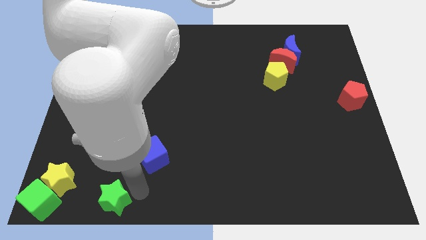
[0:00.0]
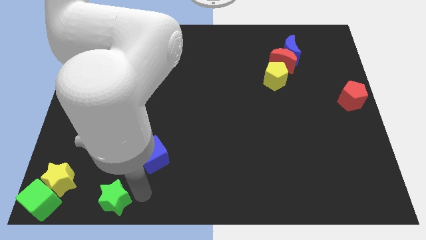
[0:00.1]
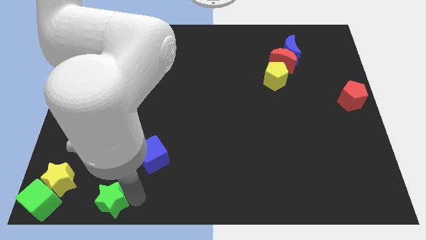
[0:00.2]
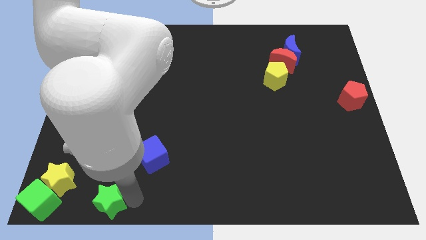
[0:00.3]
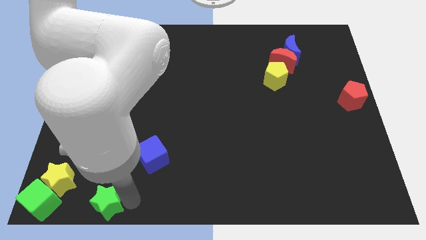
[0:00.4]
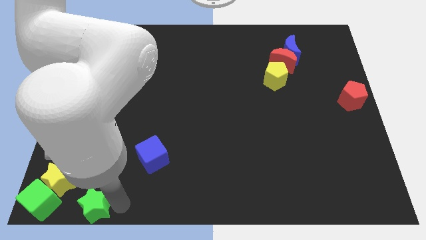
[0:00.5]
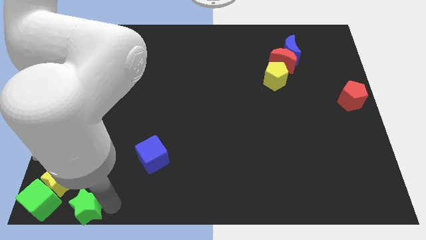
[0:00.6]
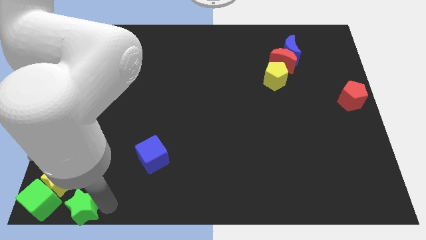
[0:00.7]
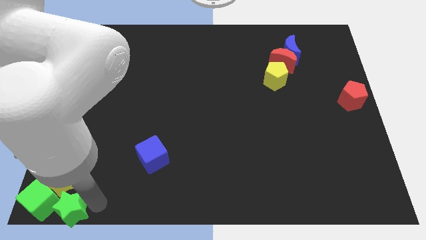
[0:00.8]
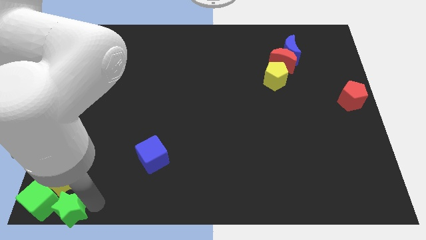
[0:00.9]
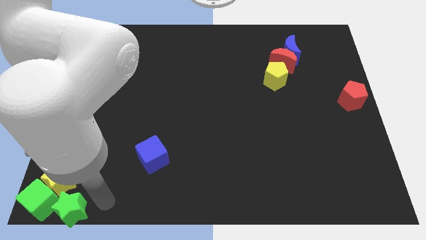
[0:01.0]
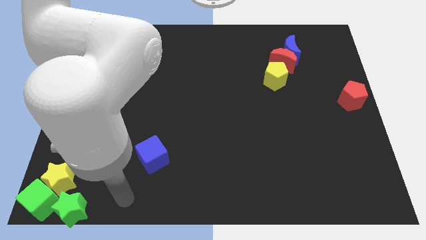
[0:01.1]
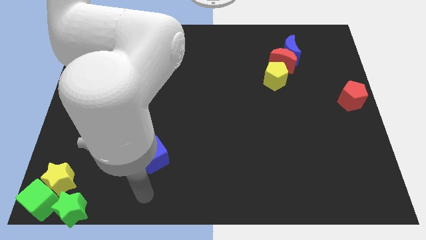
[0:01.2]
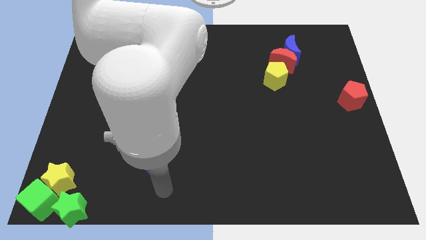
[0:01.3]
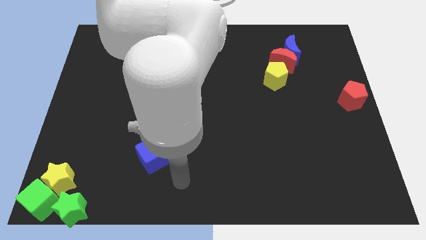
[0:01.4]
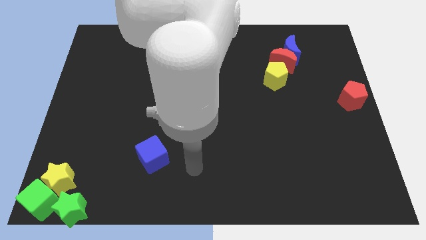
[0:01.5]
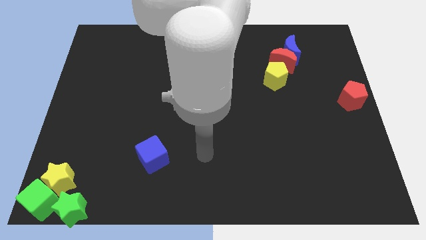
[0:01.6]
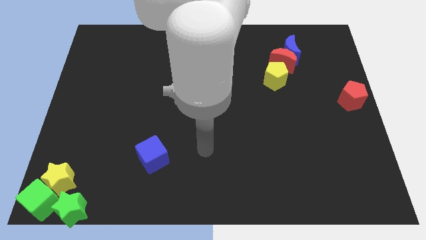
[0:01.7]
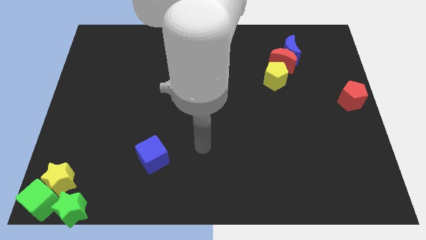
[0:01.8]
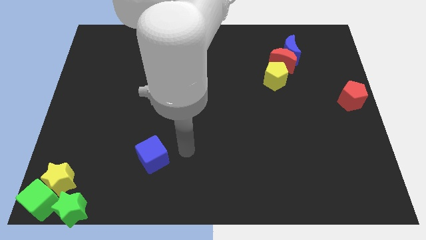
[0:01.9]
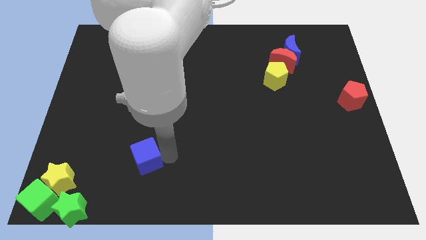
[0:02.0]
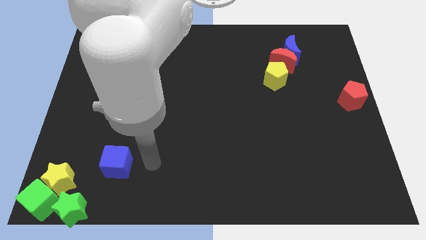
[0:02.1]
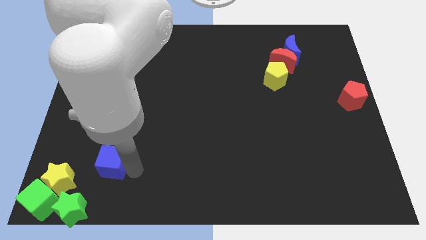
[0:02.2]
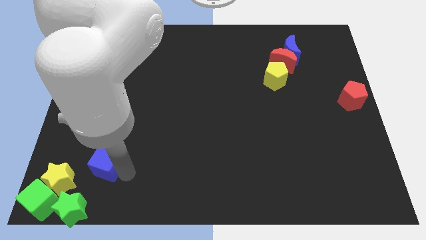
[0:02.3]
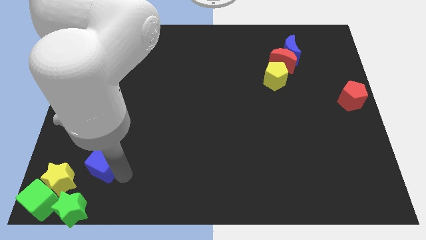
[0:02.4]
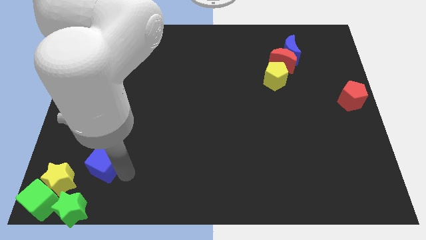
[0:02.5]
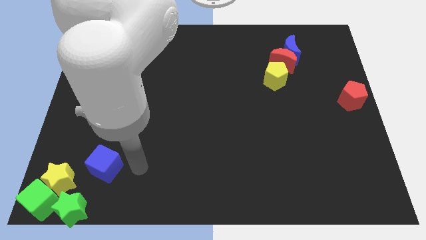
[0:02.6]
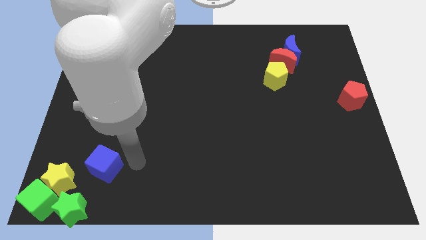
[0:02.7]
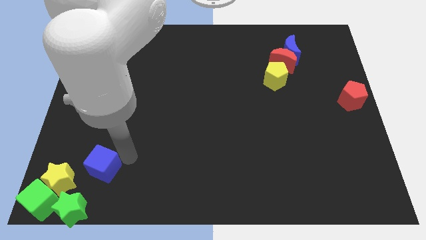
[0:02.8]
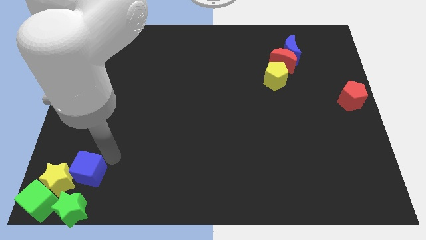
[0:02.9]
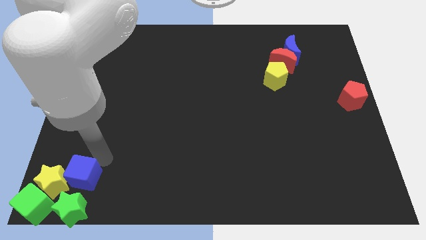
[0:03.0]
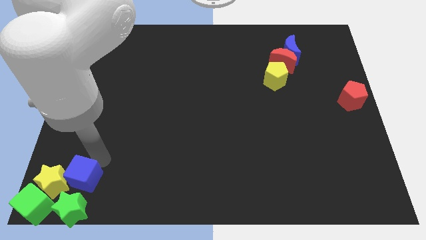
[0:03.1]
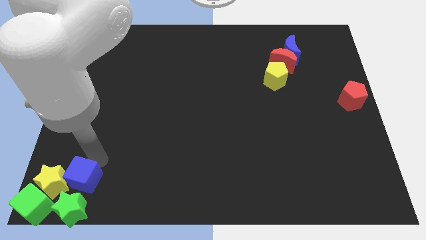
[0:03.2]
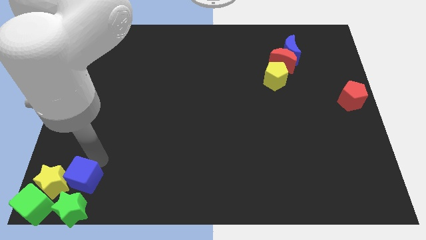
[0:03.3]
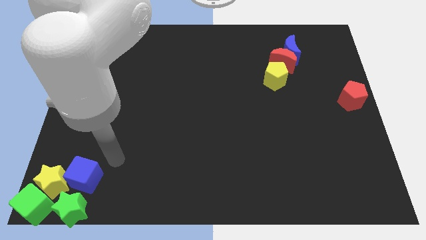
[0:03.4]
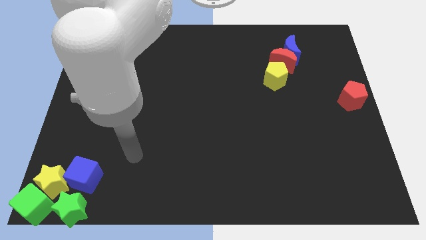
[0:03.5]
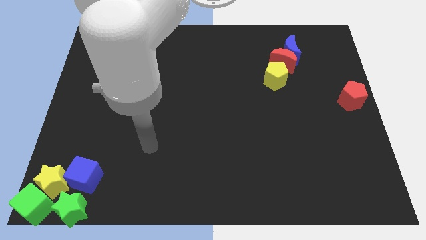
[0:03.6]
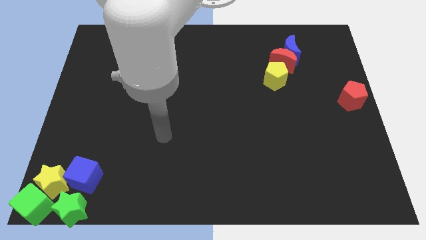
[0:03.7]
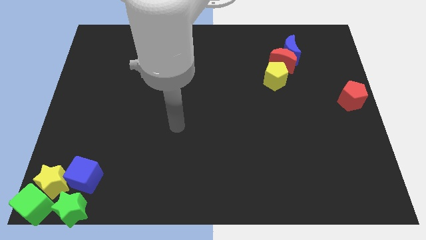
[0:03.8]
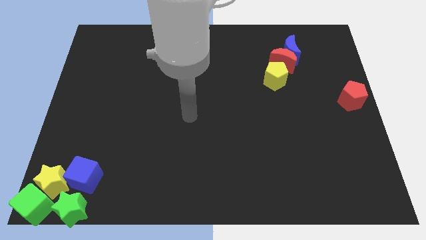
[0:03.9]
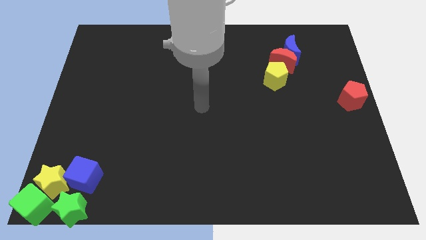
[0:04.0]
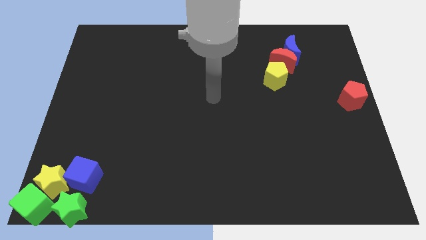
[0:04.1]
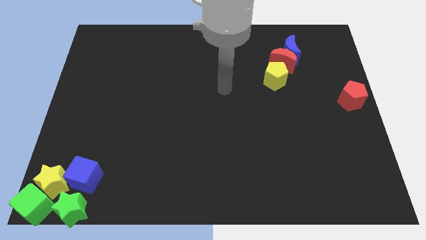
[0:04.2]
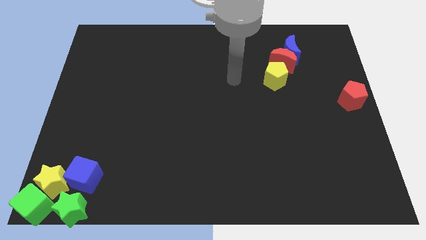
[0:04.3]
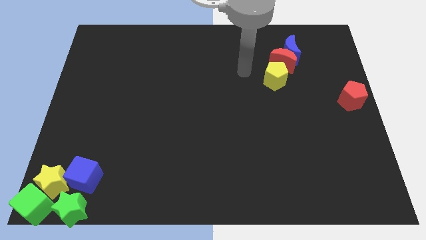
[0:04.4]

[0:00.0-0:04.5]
move the blue cube above the green star

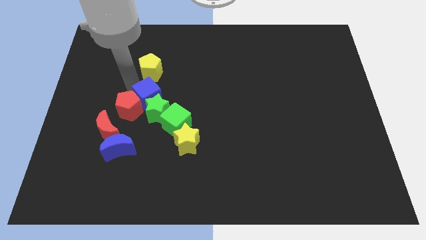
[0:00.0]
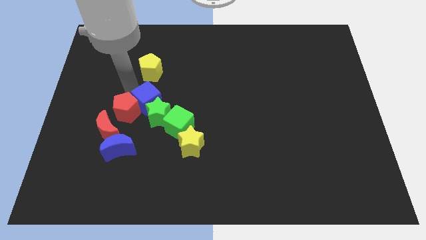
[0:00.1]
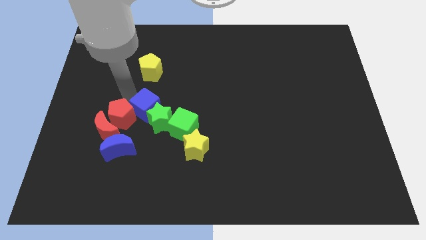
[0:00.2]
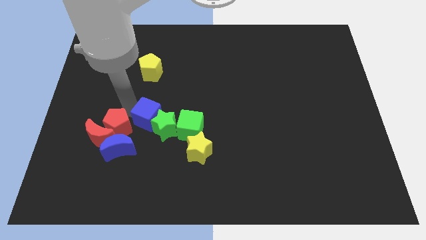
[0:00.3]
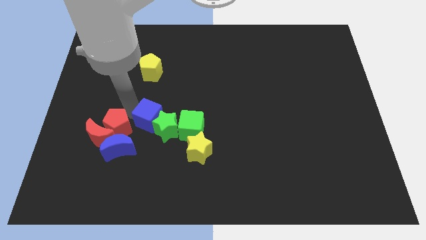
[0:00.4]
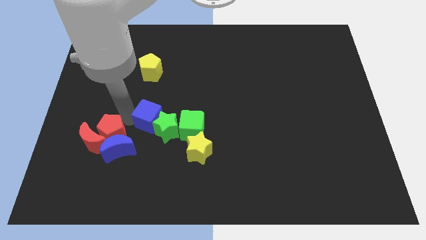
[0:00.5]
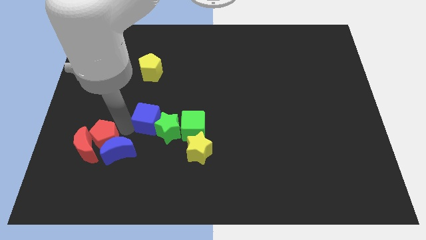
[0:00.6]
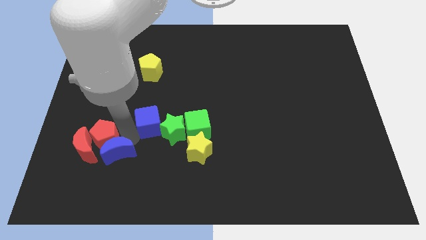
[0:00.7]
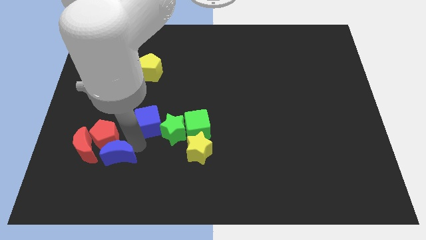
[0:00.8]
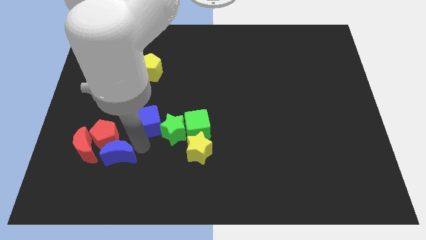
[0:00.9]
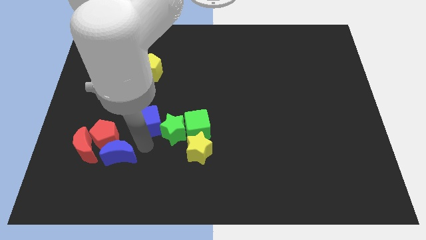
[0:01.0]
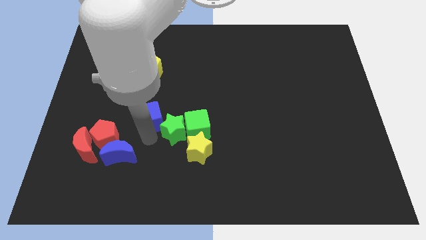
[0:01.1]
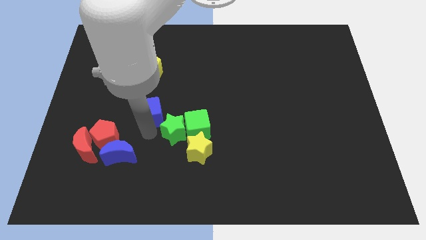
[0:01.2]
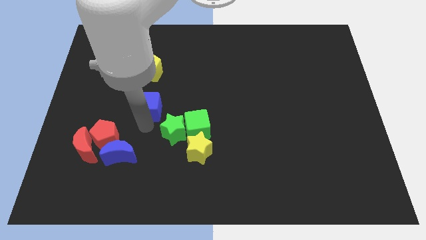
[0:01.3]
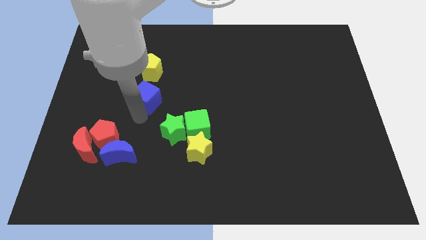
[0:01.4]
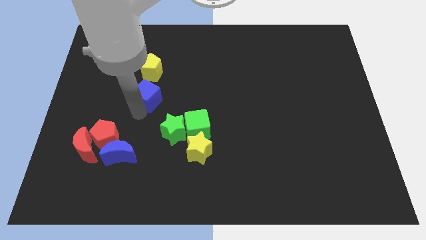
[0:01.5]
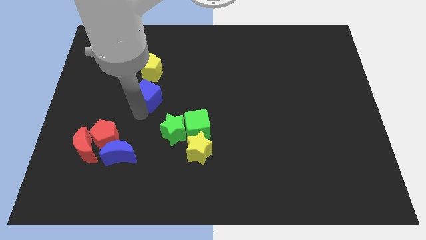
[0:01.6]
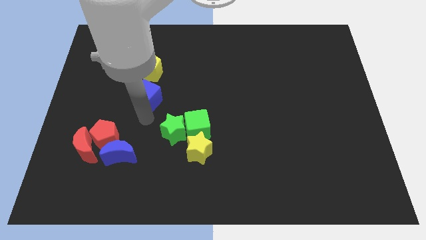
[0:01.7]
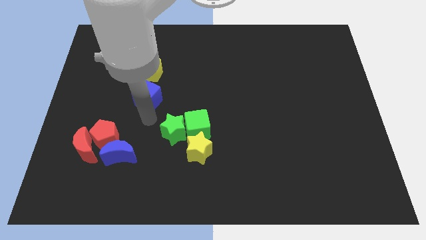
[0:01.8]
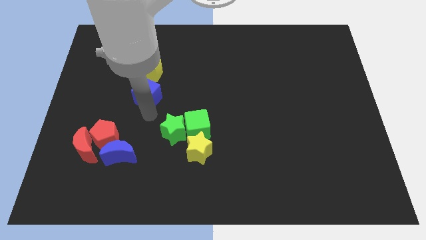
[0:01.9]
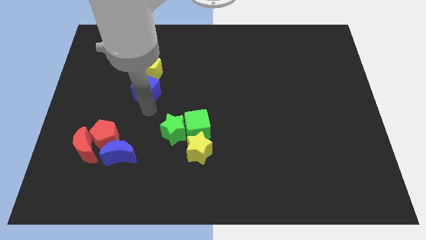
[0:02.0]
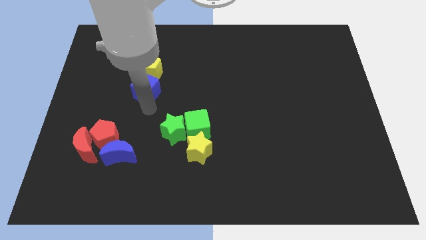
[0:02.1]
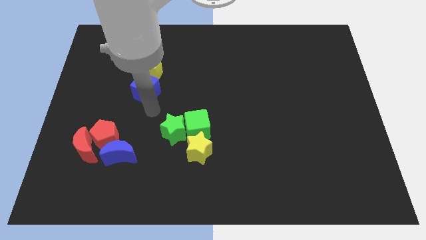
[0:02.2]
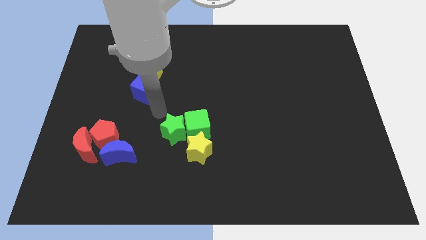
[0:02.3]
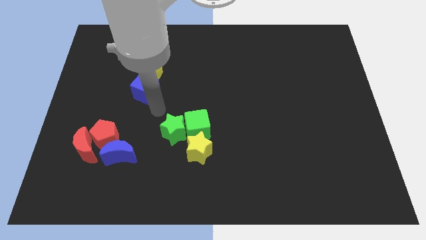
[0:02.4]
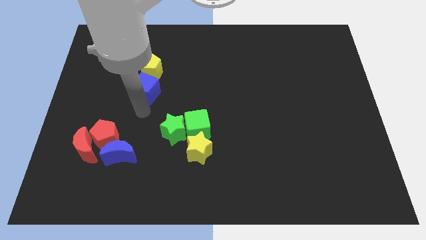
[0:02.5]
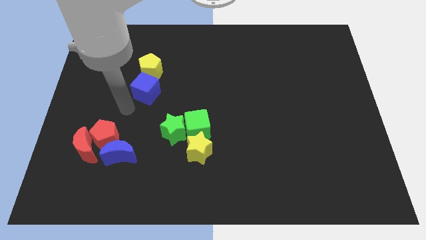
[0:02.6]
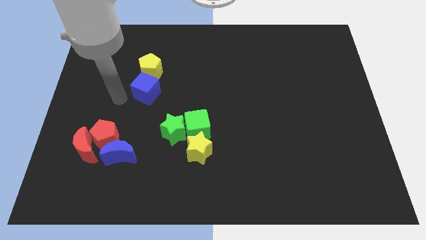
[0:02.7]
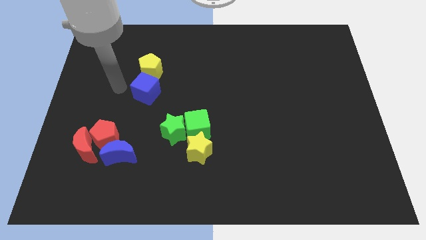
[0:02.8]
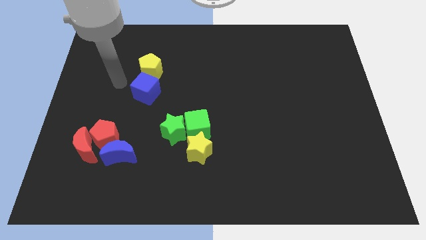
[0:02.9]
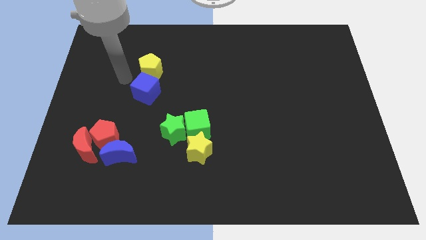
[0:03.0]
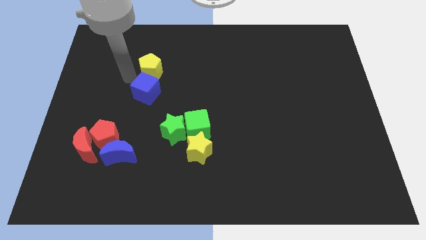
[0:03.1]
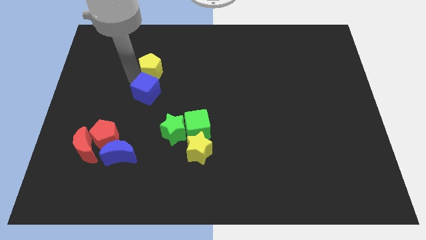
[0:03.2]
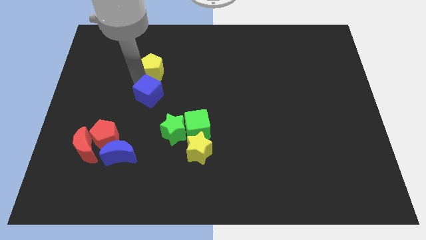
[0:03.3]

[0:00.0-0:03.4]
move the blue cube close to the yellow pentagon

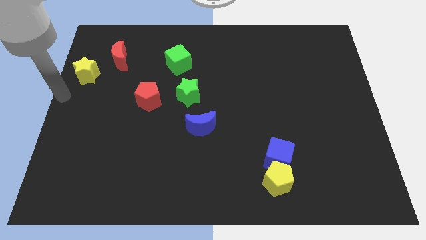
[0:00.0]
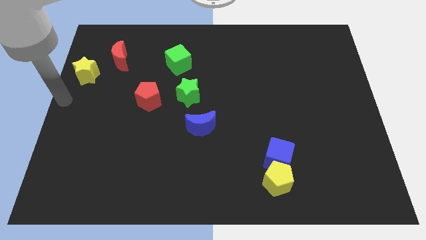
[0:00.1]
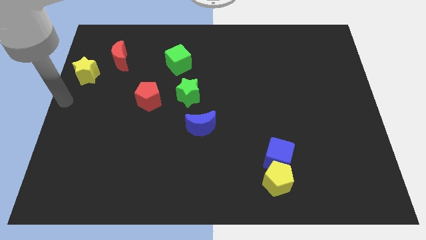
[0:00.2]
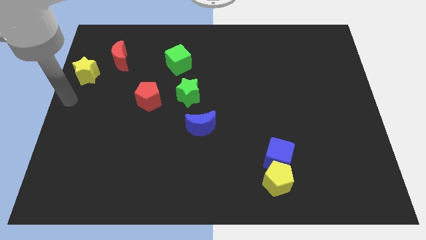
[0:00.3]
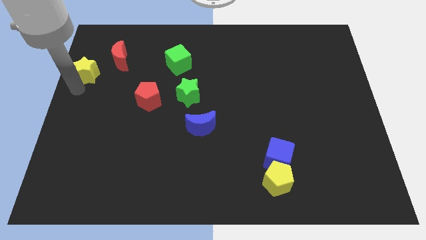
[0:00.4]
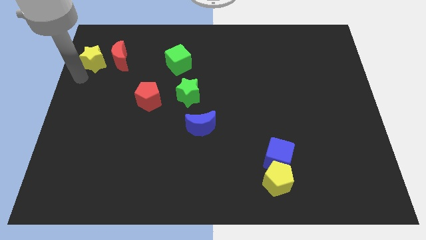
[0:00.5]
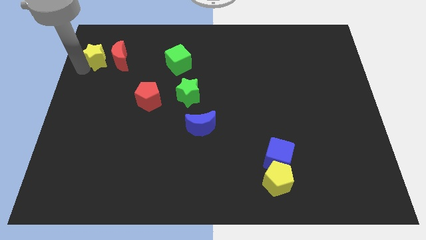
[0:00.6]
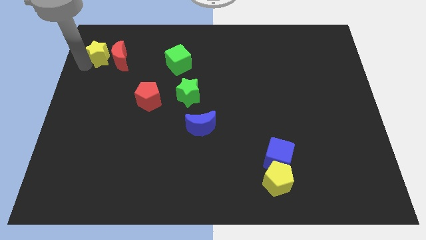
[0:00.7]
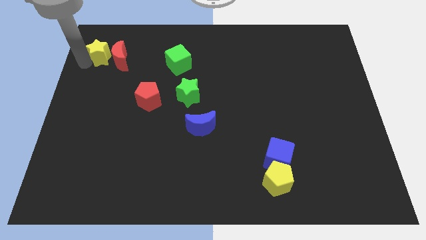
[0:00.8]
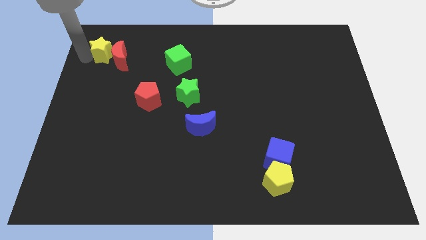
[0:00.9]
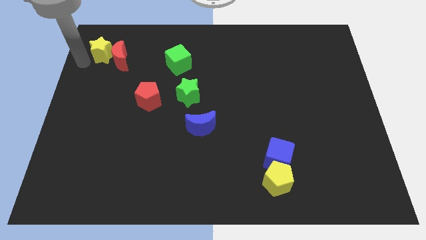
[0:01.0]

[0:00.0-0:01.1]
slide yellow star to left of red moon

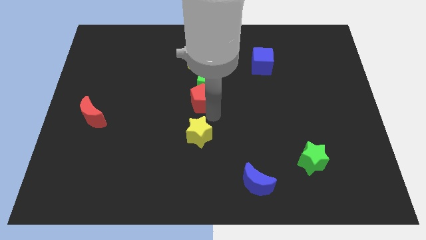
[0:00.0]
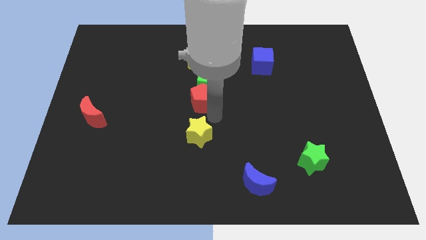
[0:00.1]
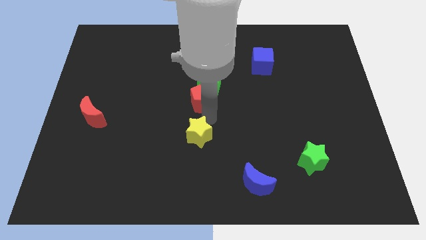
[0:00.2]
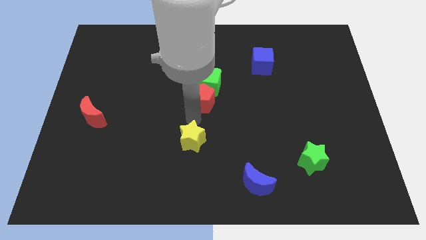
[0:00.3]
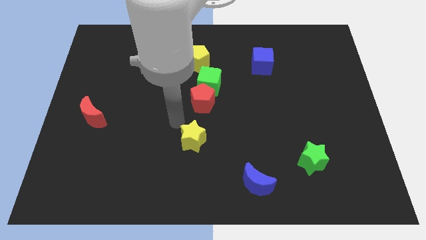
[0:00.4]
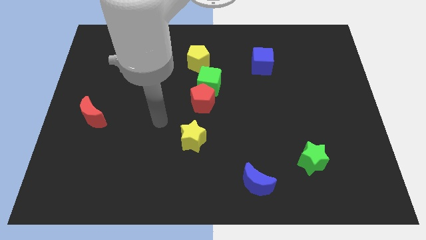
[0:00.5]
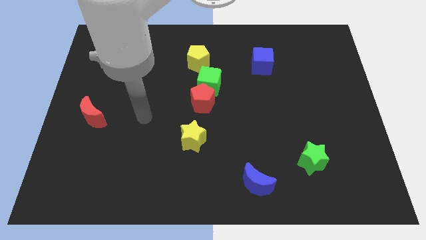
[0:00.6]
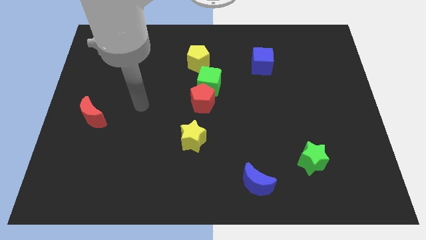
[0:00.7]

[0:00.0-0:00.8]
push the yellow star downwards slightly
